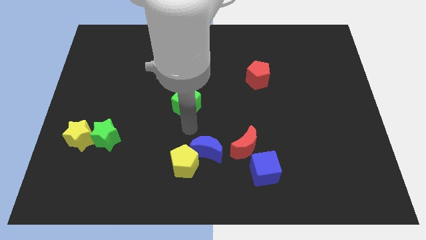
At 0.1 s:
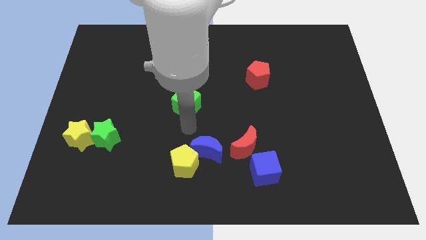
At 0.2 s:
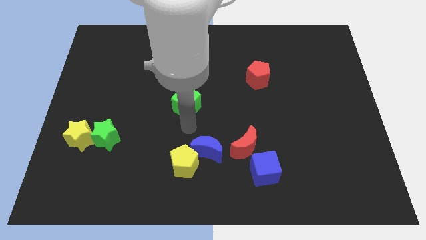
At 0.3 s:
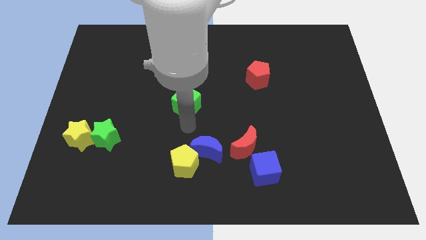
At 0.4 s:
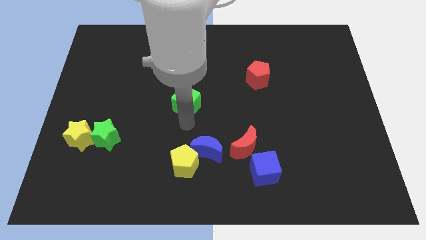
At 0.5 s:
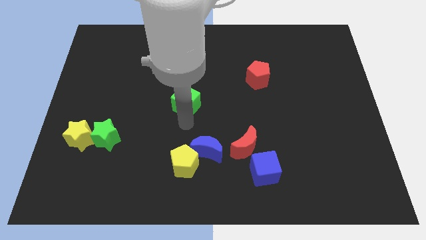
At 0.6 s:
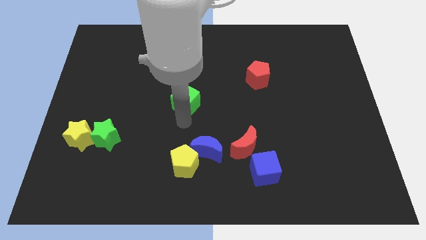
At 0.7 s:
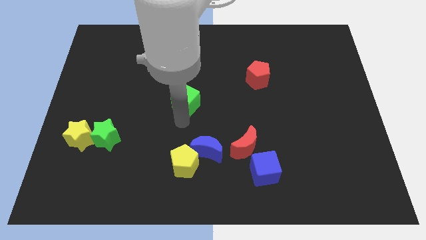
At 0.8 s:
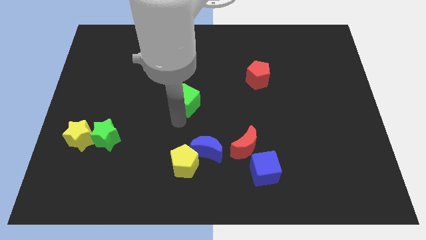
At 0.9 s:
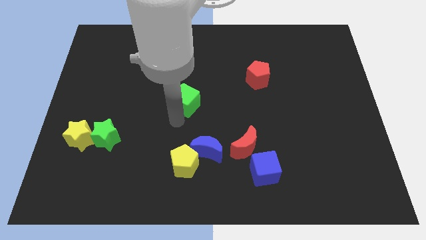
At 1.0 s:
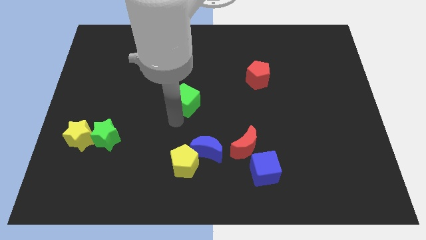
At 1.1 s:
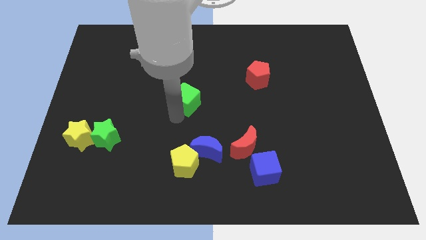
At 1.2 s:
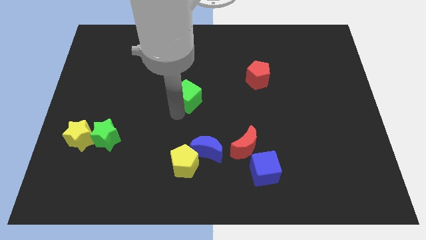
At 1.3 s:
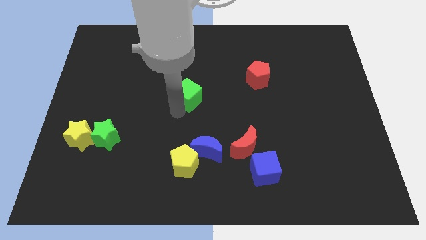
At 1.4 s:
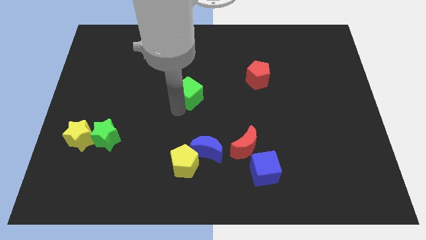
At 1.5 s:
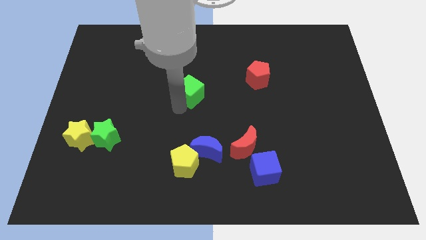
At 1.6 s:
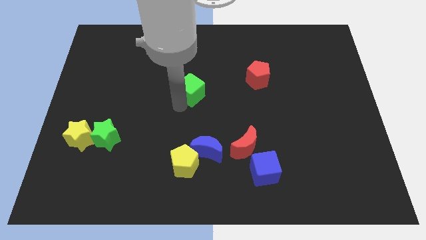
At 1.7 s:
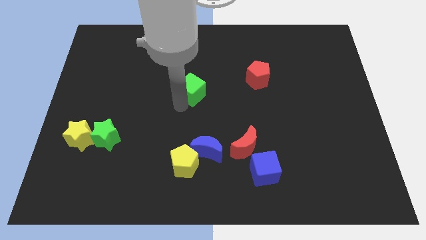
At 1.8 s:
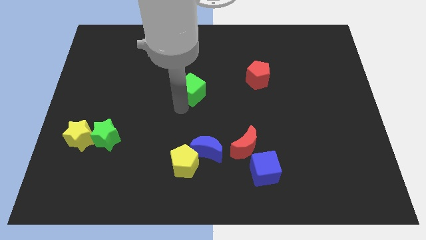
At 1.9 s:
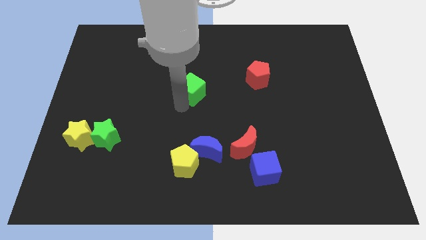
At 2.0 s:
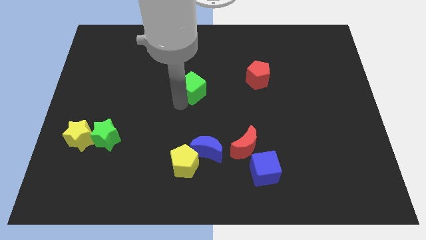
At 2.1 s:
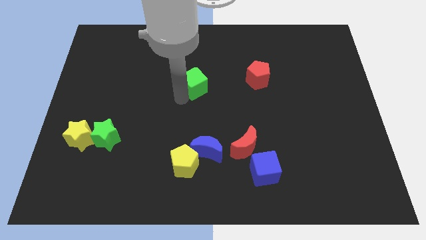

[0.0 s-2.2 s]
slide the green cube towards the top side of the board

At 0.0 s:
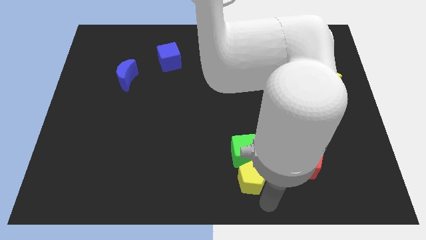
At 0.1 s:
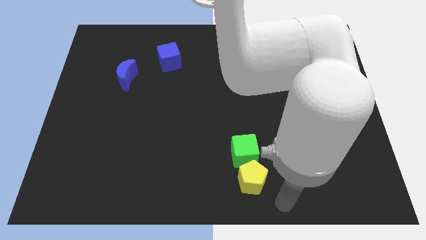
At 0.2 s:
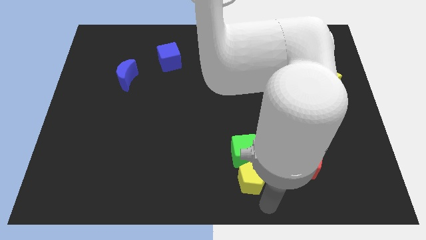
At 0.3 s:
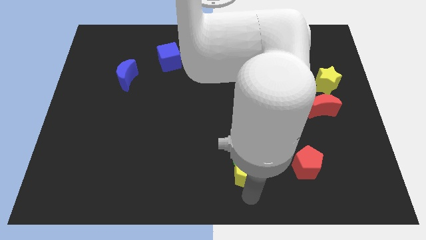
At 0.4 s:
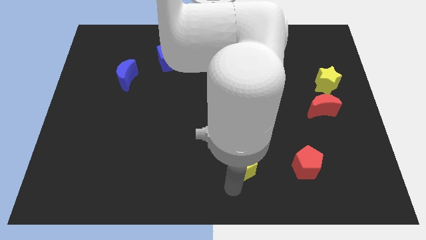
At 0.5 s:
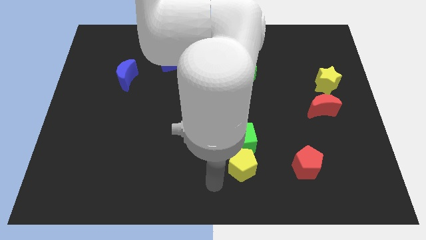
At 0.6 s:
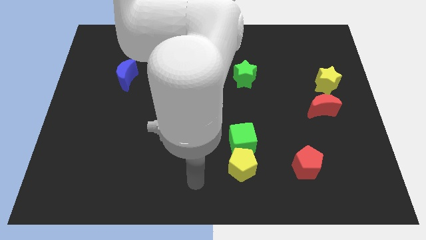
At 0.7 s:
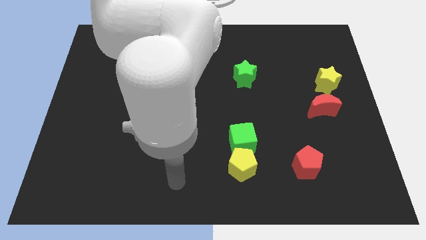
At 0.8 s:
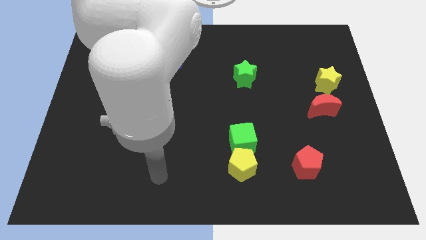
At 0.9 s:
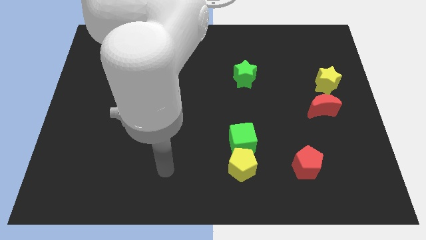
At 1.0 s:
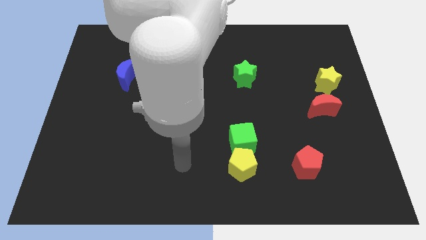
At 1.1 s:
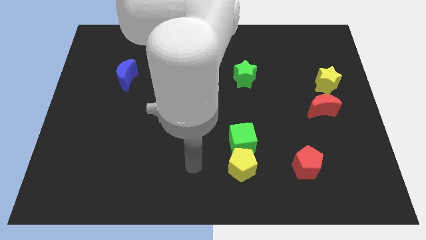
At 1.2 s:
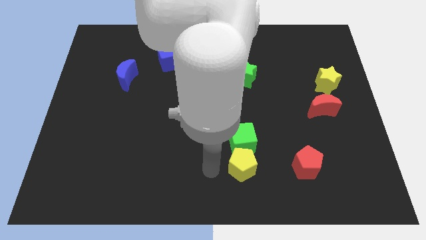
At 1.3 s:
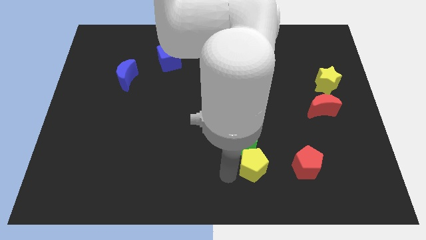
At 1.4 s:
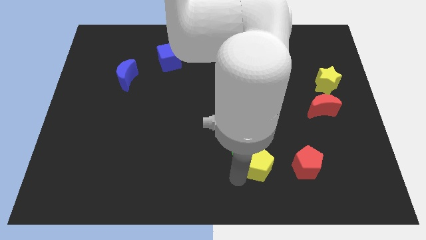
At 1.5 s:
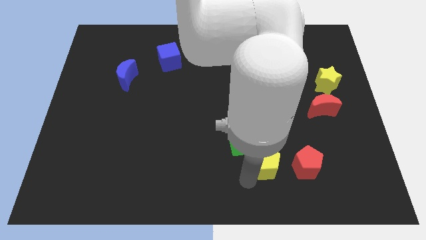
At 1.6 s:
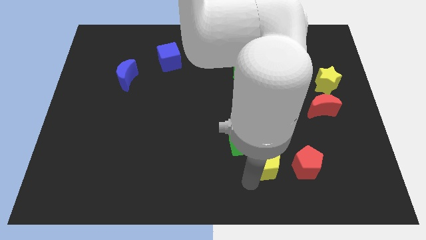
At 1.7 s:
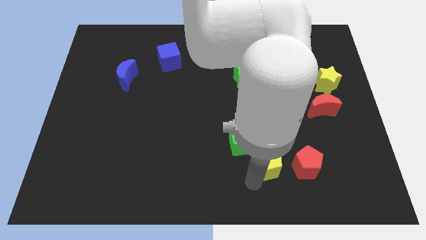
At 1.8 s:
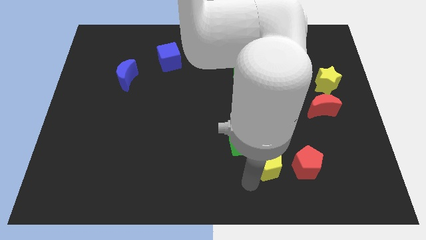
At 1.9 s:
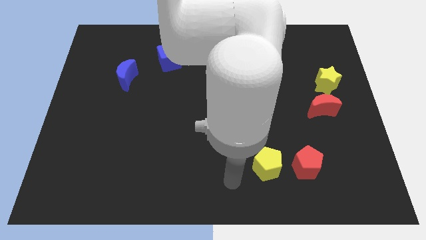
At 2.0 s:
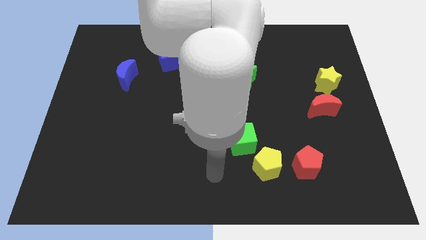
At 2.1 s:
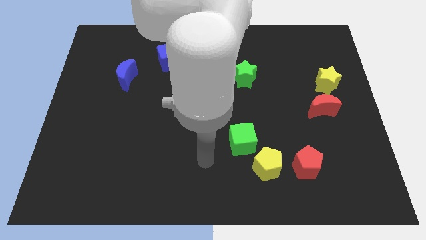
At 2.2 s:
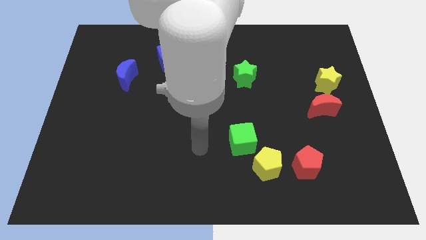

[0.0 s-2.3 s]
place yellow pentagon into the green cube and red pentagon

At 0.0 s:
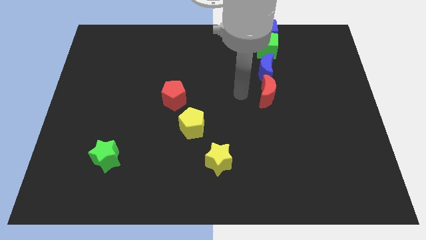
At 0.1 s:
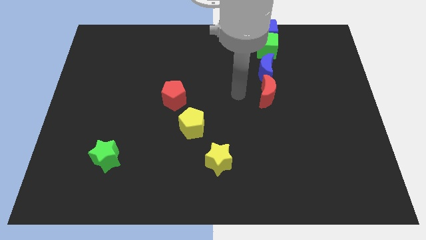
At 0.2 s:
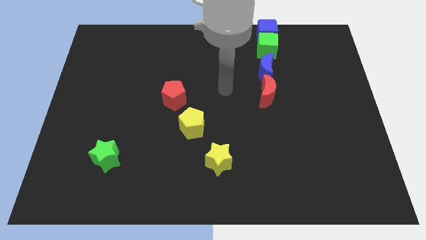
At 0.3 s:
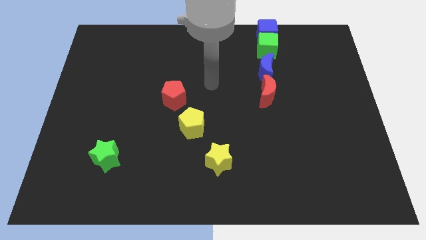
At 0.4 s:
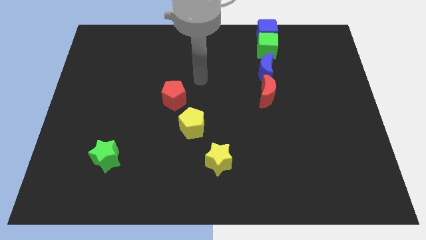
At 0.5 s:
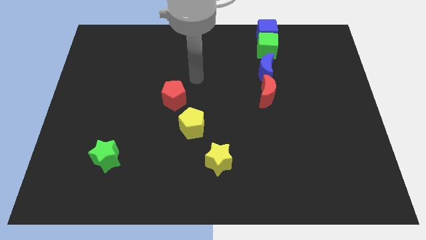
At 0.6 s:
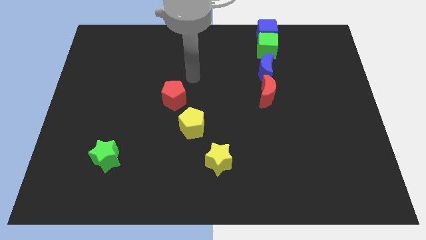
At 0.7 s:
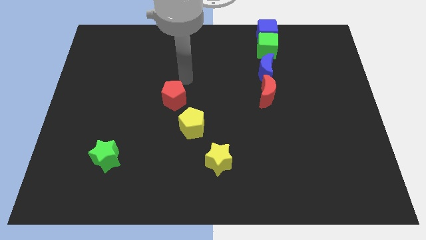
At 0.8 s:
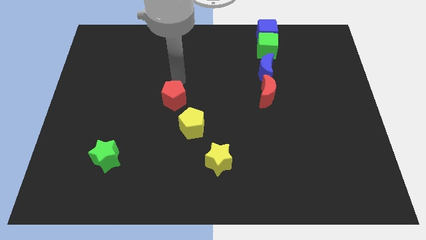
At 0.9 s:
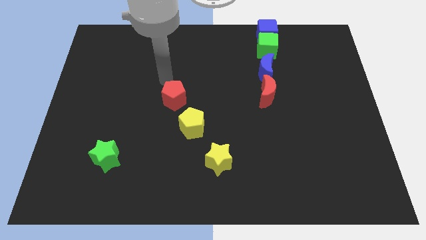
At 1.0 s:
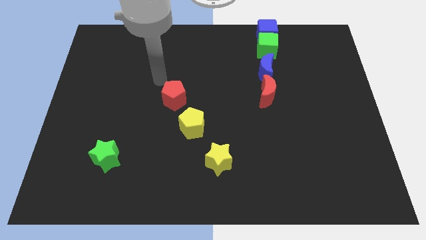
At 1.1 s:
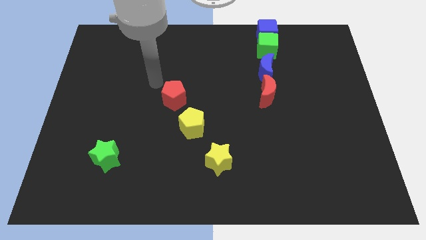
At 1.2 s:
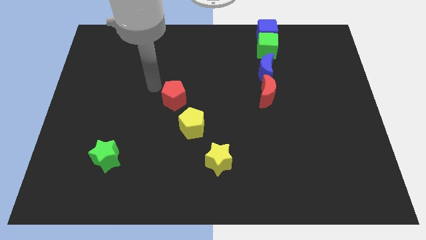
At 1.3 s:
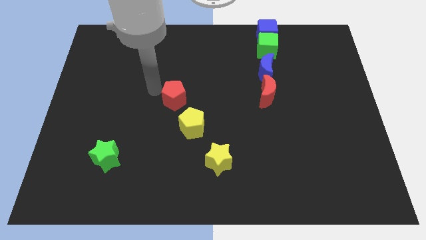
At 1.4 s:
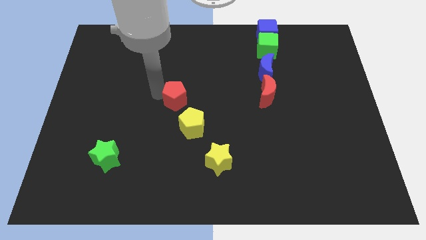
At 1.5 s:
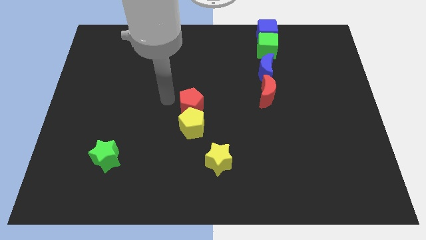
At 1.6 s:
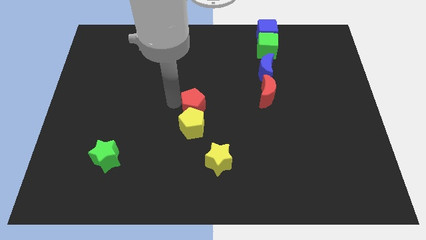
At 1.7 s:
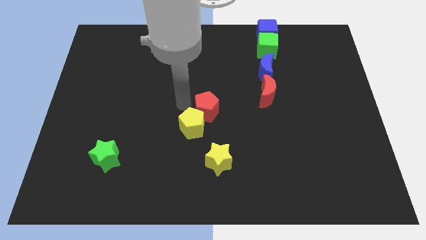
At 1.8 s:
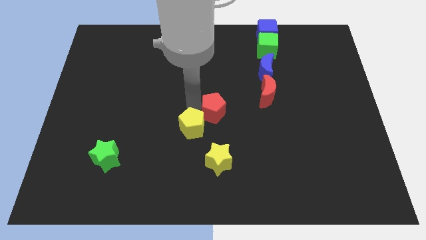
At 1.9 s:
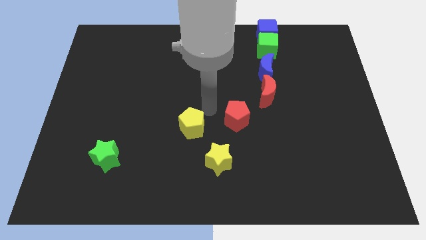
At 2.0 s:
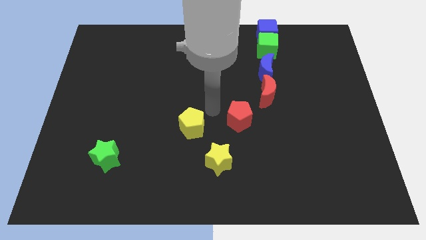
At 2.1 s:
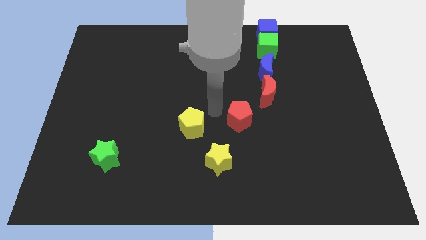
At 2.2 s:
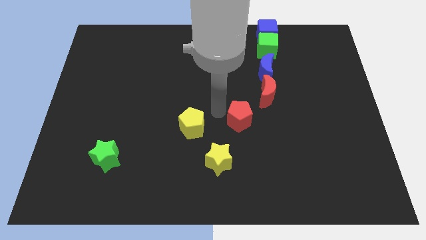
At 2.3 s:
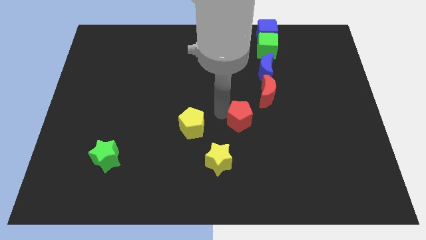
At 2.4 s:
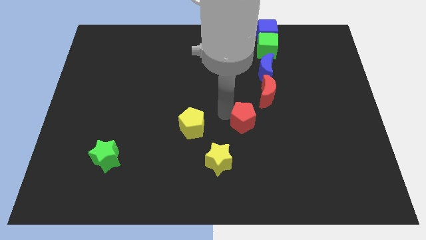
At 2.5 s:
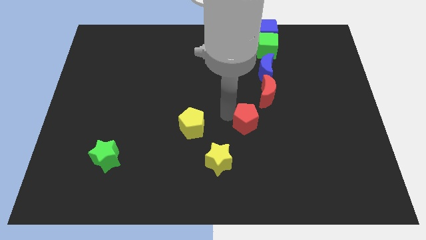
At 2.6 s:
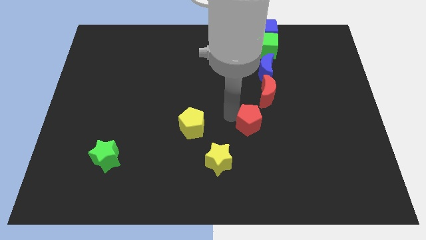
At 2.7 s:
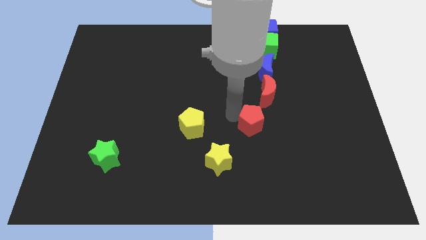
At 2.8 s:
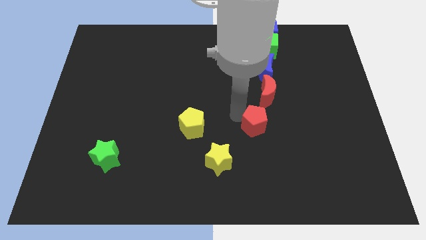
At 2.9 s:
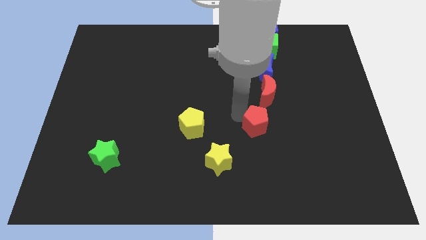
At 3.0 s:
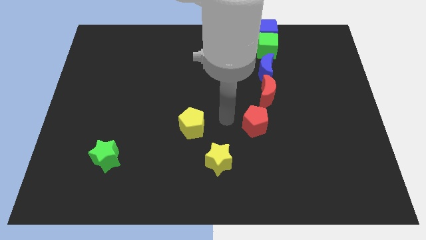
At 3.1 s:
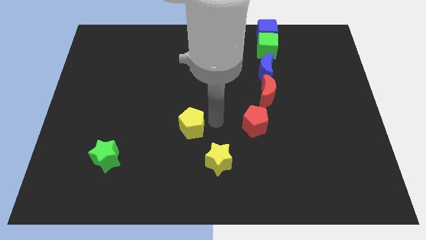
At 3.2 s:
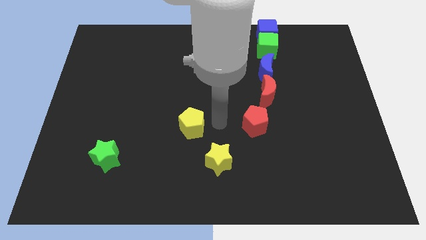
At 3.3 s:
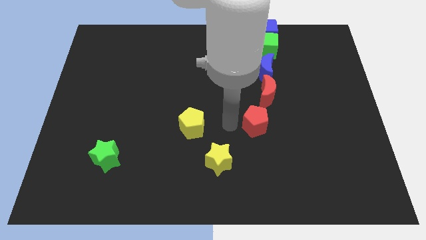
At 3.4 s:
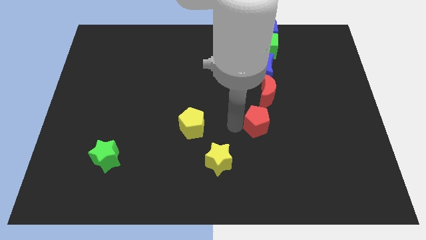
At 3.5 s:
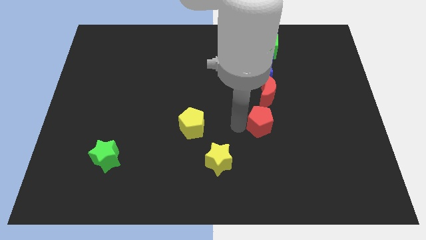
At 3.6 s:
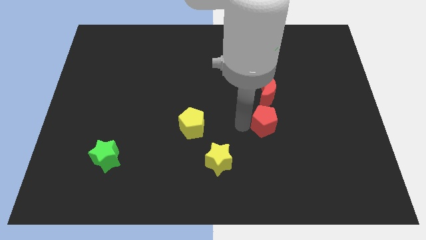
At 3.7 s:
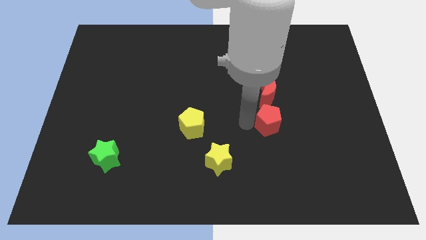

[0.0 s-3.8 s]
push the red pentagon to the bottom of the red crescent

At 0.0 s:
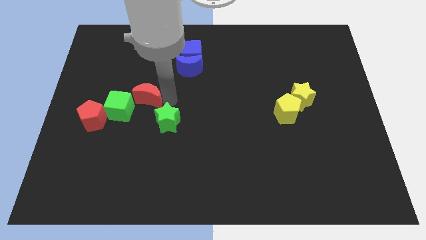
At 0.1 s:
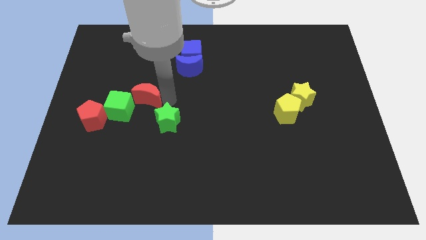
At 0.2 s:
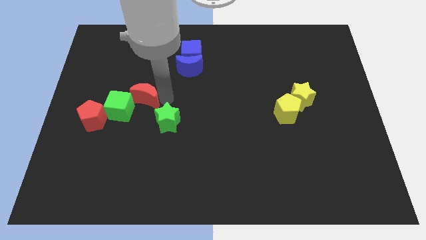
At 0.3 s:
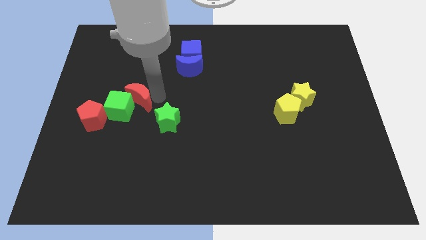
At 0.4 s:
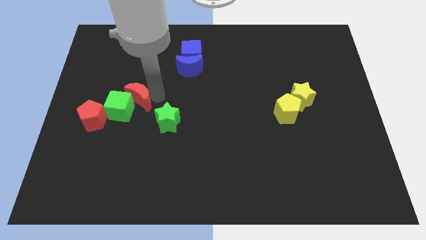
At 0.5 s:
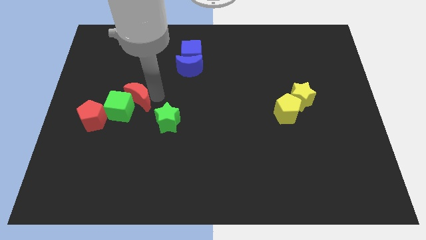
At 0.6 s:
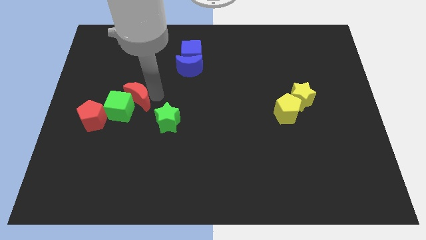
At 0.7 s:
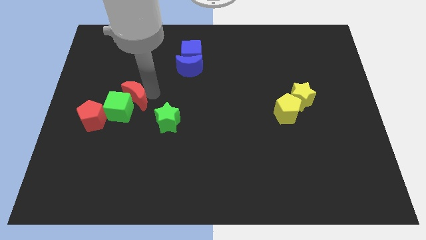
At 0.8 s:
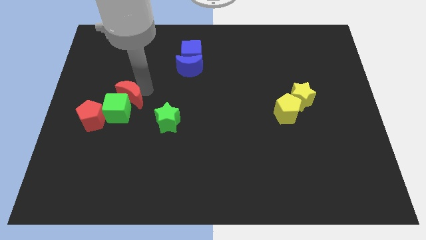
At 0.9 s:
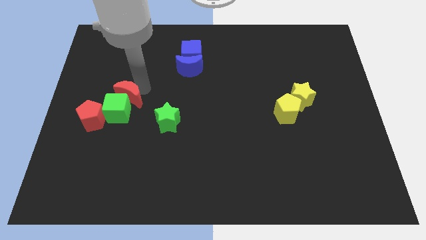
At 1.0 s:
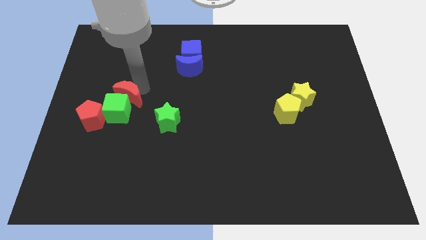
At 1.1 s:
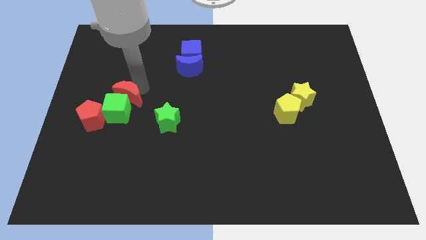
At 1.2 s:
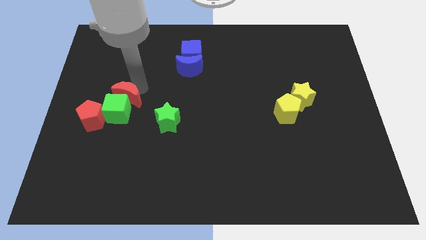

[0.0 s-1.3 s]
move red moon towards green cube
